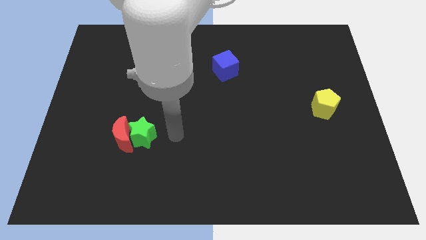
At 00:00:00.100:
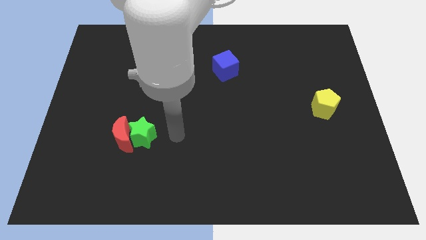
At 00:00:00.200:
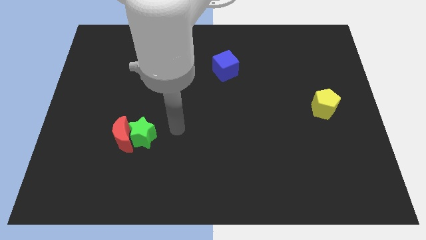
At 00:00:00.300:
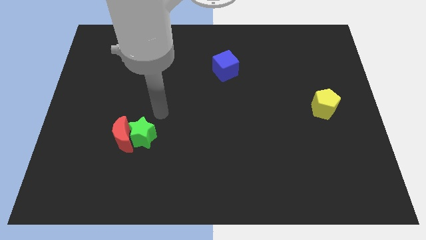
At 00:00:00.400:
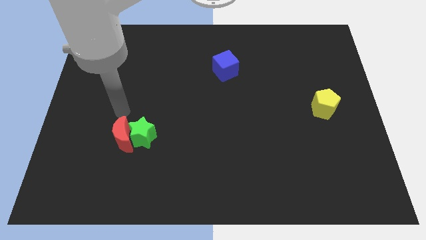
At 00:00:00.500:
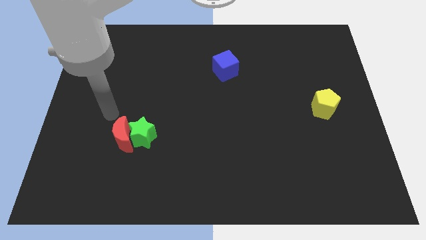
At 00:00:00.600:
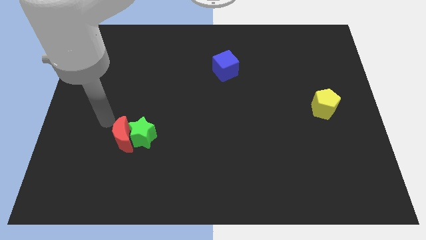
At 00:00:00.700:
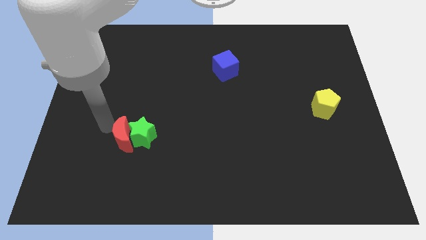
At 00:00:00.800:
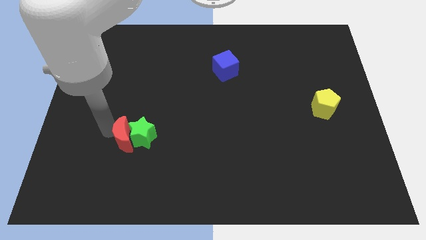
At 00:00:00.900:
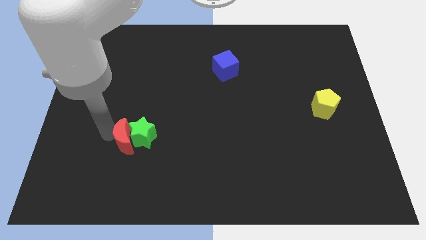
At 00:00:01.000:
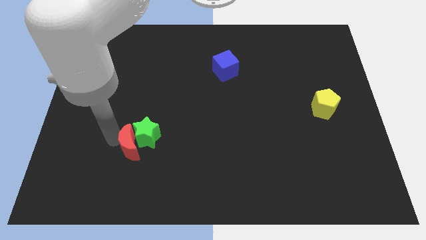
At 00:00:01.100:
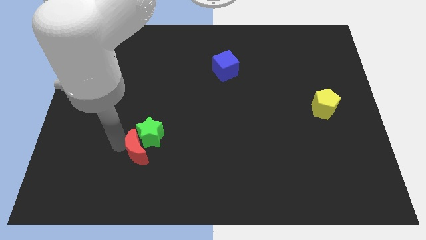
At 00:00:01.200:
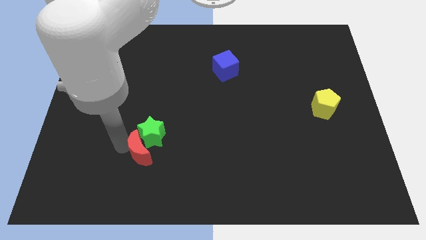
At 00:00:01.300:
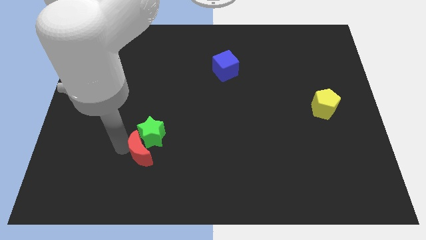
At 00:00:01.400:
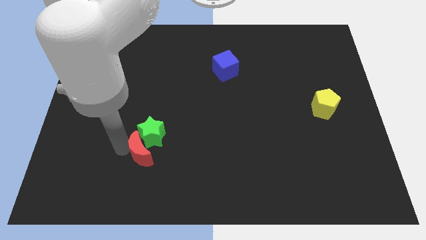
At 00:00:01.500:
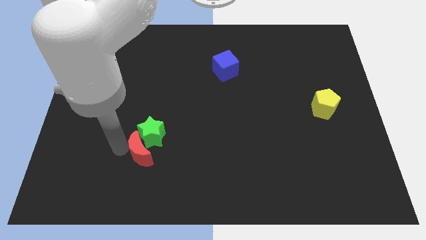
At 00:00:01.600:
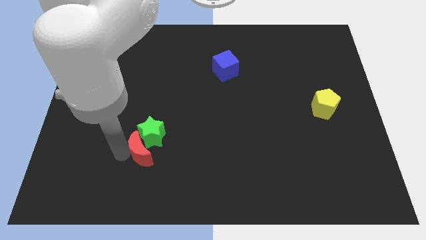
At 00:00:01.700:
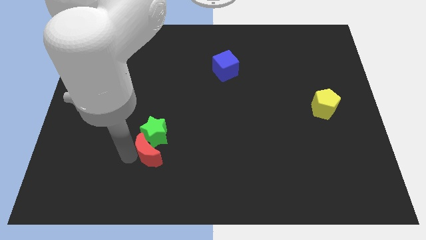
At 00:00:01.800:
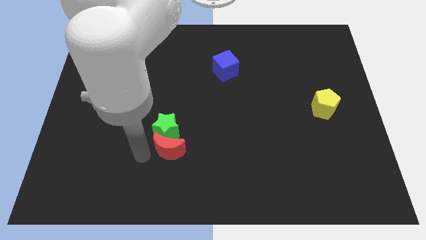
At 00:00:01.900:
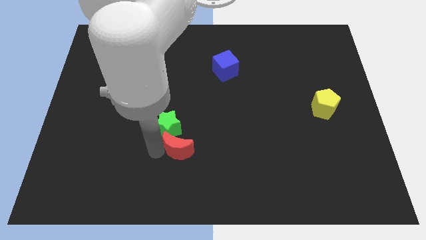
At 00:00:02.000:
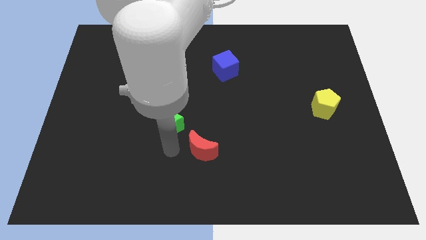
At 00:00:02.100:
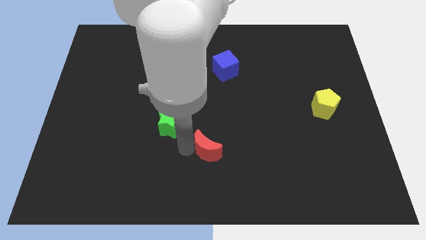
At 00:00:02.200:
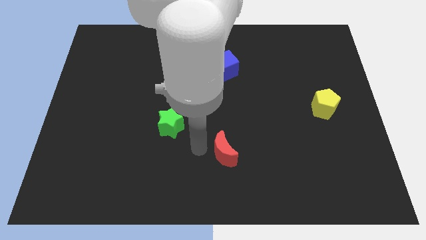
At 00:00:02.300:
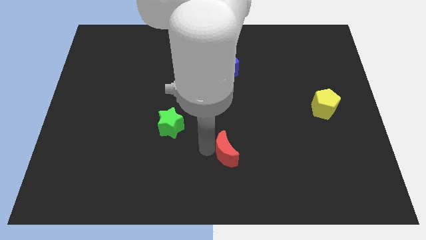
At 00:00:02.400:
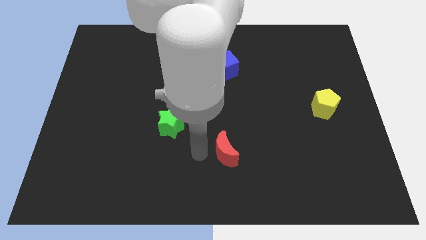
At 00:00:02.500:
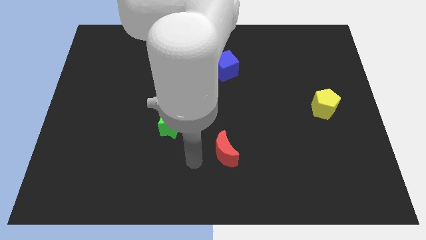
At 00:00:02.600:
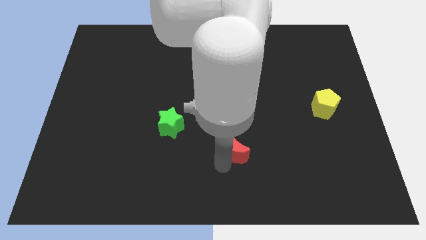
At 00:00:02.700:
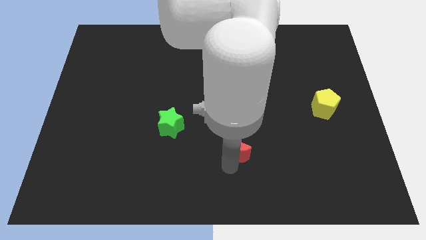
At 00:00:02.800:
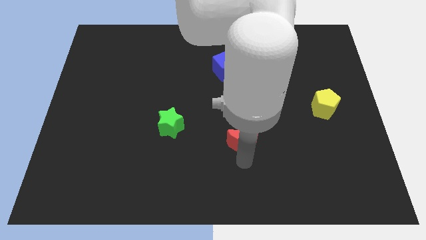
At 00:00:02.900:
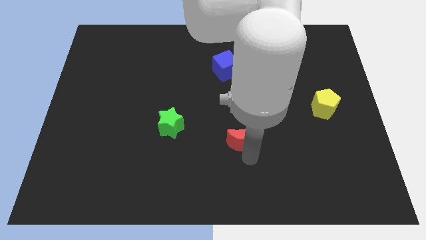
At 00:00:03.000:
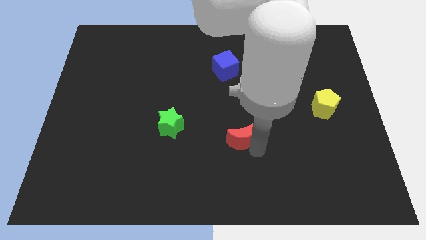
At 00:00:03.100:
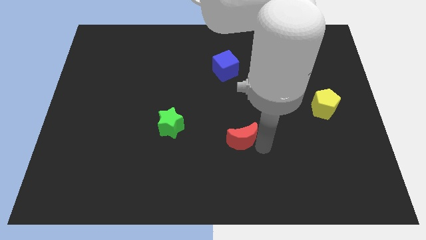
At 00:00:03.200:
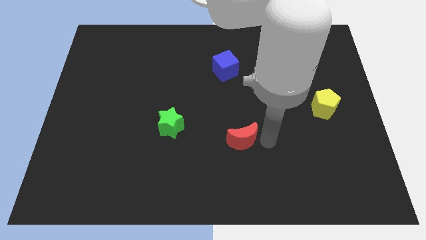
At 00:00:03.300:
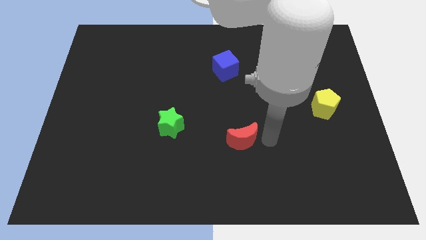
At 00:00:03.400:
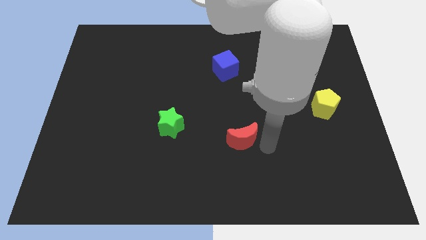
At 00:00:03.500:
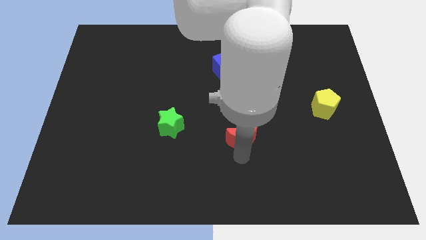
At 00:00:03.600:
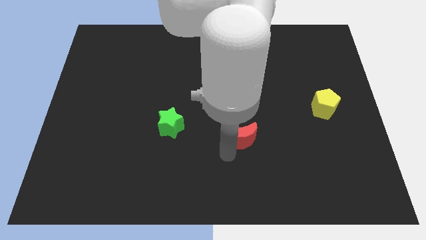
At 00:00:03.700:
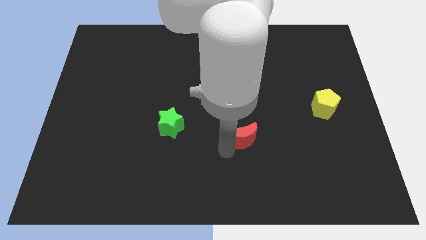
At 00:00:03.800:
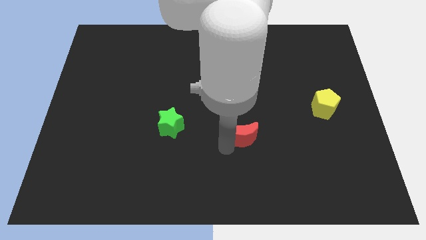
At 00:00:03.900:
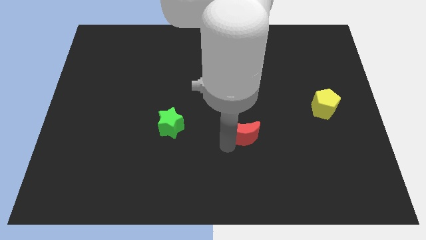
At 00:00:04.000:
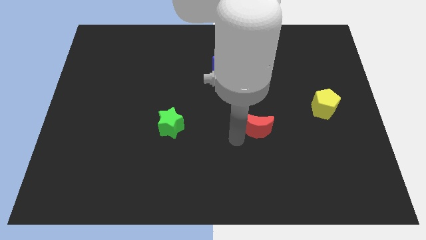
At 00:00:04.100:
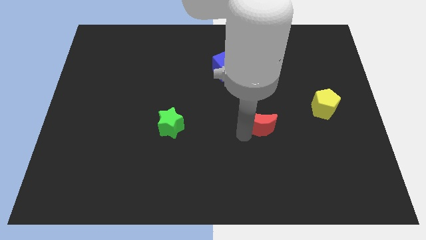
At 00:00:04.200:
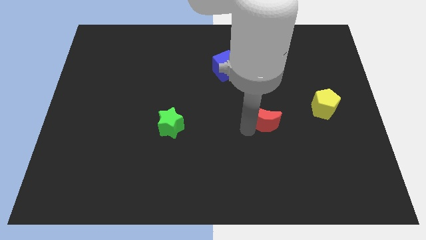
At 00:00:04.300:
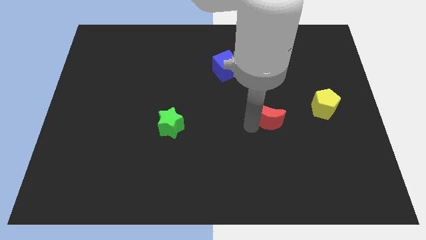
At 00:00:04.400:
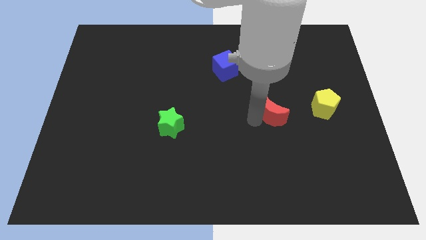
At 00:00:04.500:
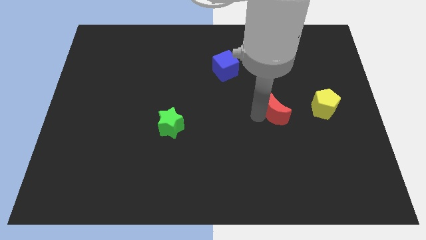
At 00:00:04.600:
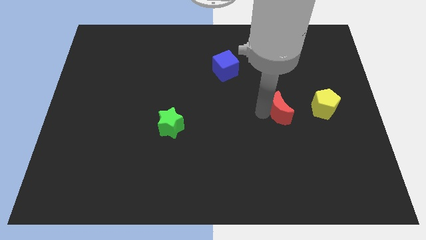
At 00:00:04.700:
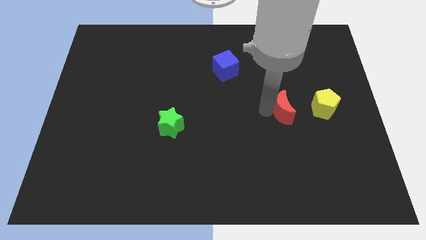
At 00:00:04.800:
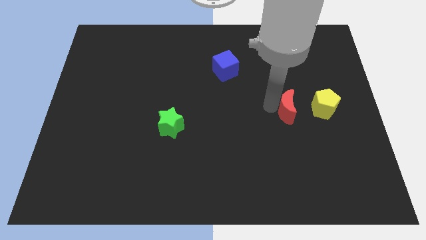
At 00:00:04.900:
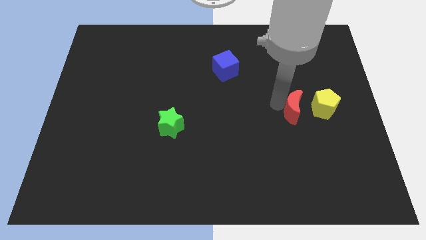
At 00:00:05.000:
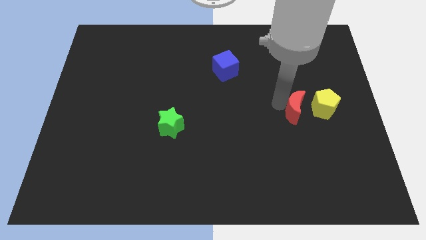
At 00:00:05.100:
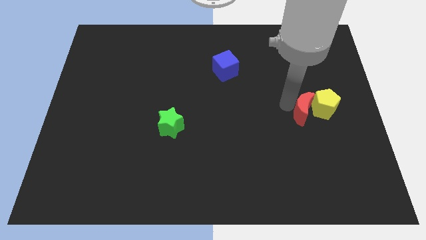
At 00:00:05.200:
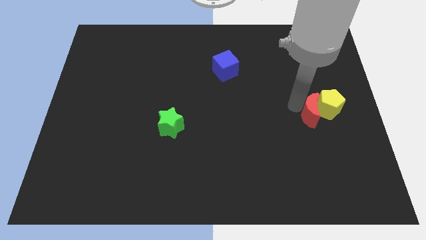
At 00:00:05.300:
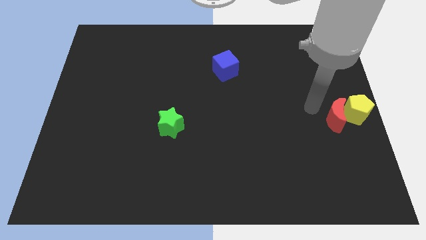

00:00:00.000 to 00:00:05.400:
move the red moon close to the yellow block

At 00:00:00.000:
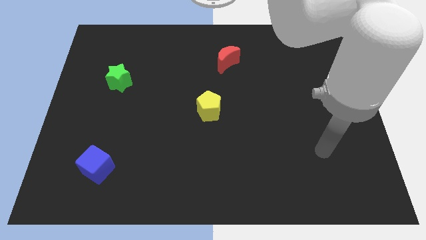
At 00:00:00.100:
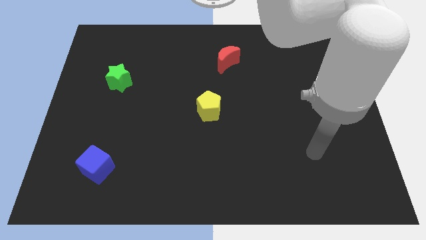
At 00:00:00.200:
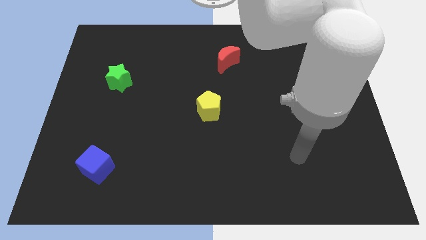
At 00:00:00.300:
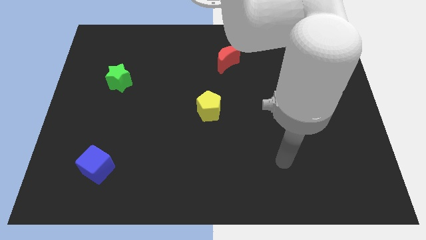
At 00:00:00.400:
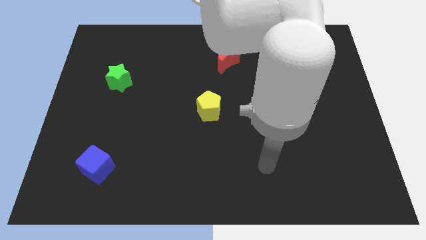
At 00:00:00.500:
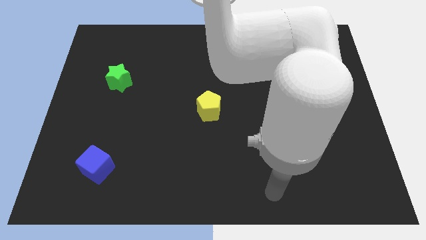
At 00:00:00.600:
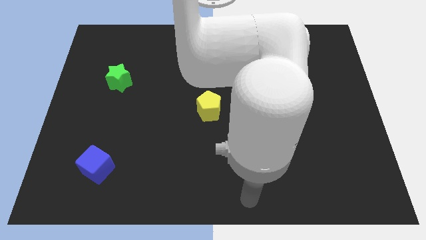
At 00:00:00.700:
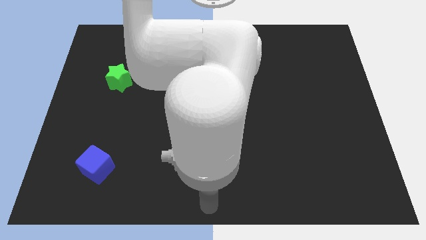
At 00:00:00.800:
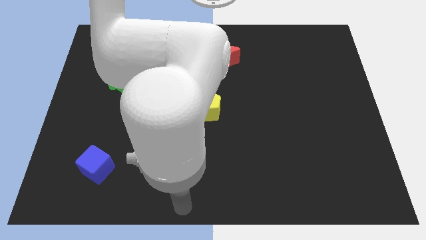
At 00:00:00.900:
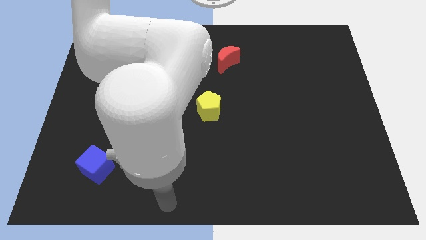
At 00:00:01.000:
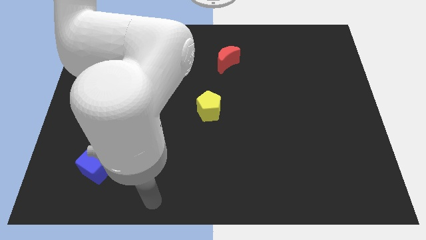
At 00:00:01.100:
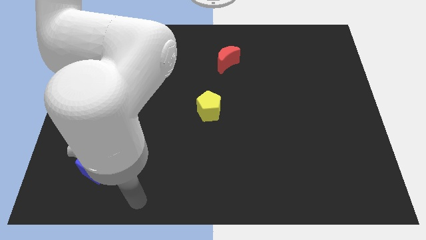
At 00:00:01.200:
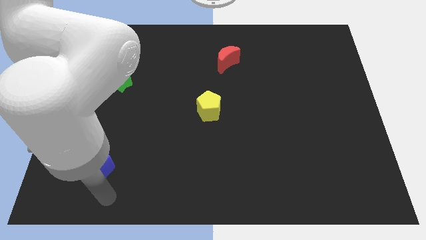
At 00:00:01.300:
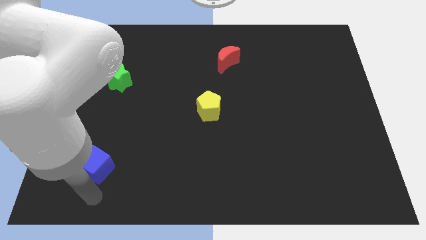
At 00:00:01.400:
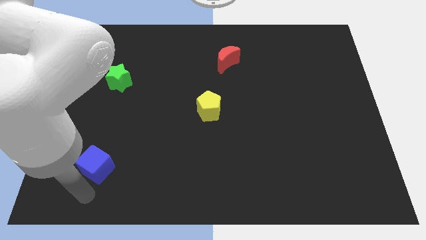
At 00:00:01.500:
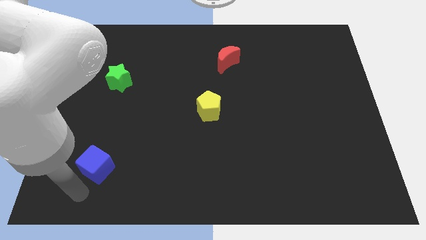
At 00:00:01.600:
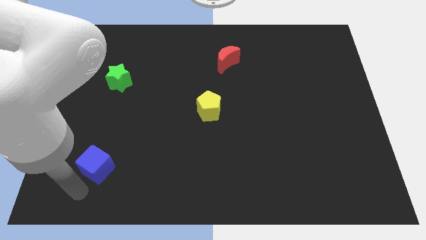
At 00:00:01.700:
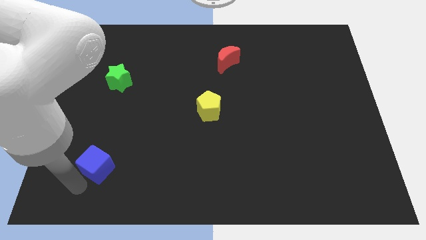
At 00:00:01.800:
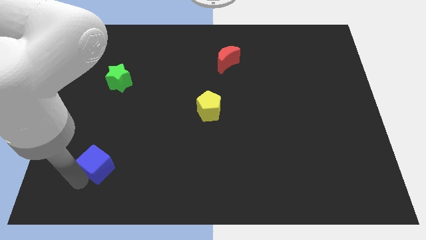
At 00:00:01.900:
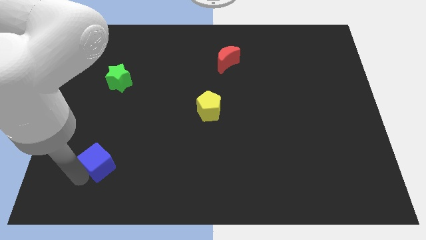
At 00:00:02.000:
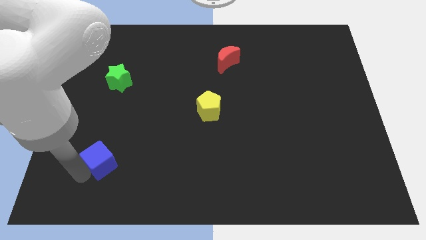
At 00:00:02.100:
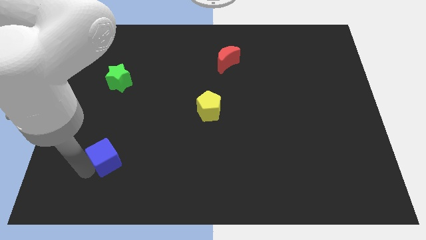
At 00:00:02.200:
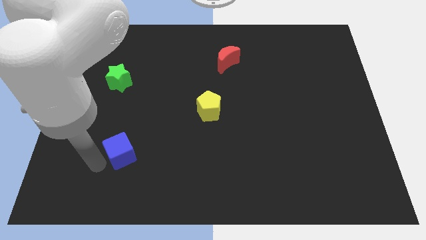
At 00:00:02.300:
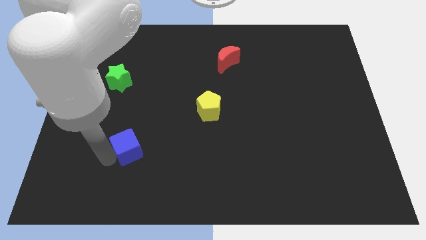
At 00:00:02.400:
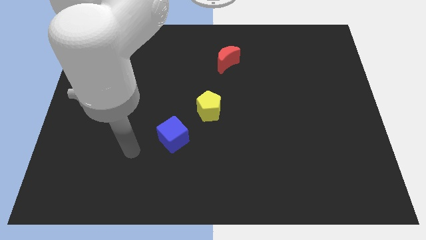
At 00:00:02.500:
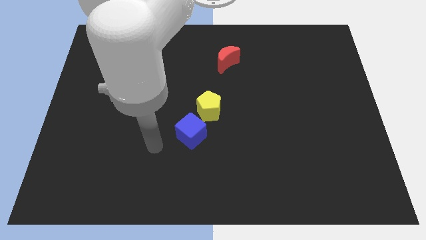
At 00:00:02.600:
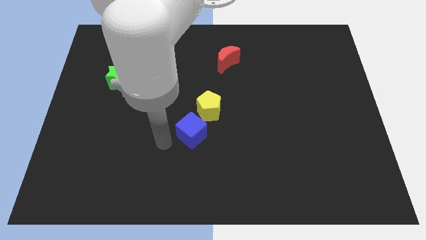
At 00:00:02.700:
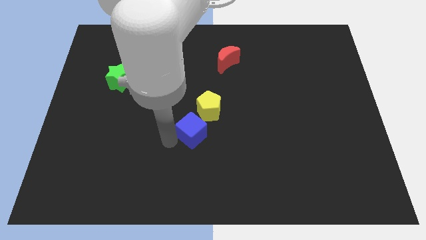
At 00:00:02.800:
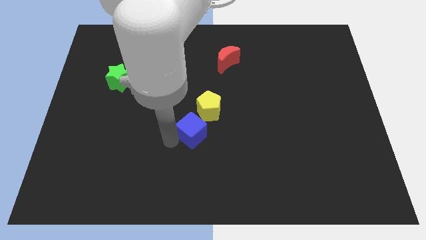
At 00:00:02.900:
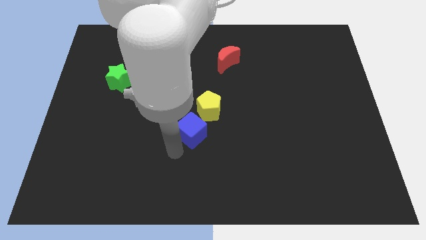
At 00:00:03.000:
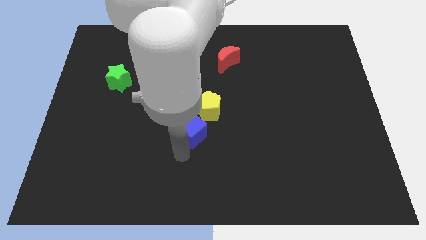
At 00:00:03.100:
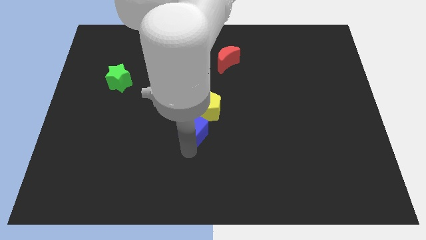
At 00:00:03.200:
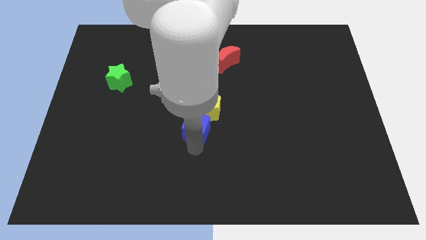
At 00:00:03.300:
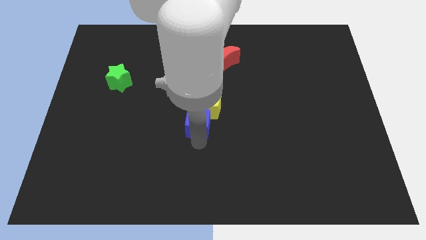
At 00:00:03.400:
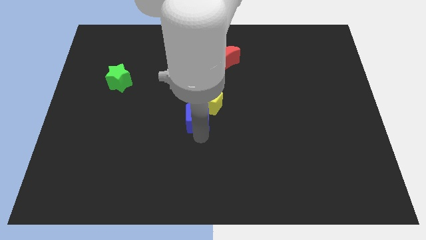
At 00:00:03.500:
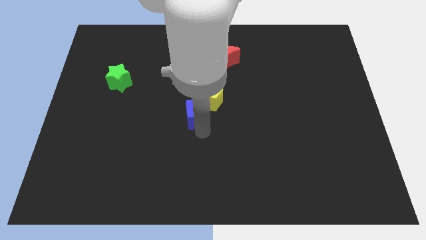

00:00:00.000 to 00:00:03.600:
put the blue block to the yellow pentagon
